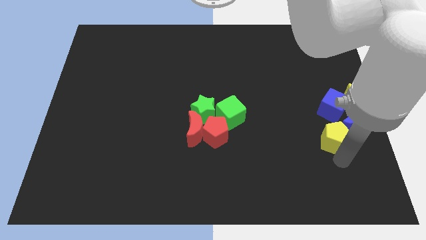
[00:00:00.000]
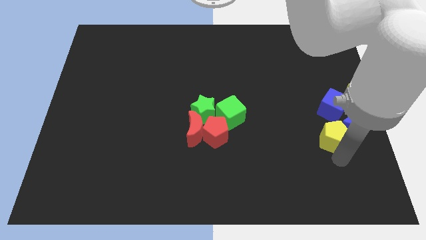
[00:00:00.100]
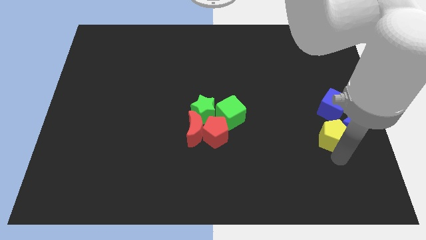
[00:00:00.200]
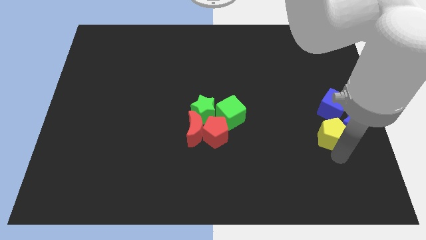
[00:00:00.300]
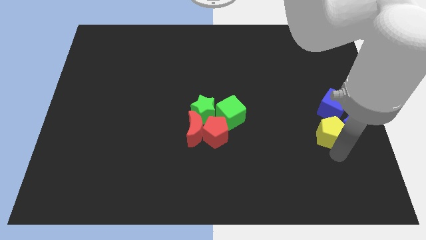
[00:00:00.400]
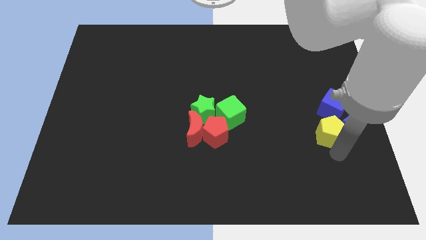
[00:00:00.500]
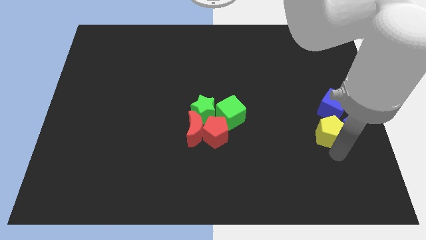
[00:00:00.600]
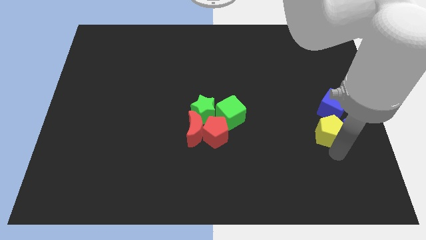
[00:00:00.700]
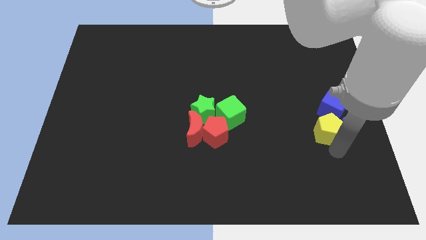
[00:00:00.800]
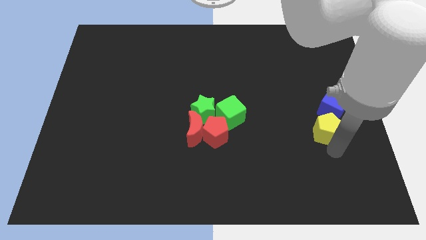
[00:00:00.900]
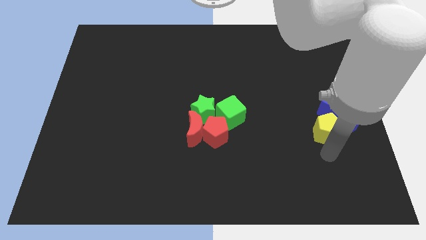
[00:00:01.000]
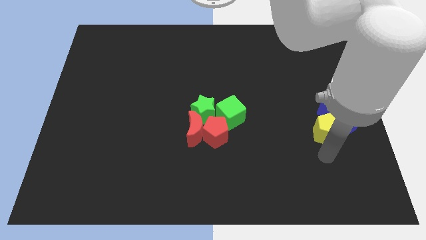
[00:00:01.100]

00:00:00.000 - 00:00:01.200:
place the yellow pentagon below the blue cube

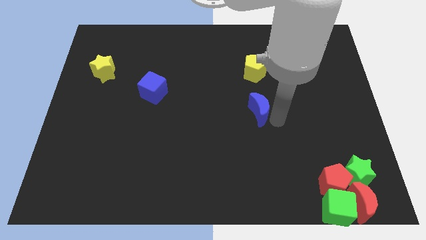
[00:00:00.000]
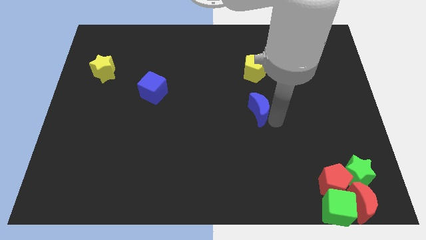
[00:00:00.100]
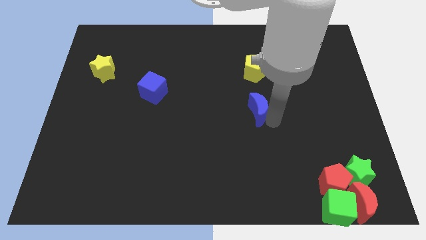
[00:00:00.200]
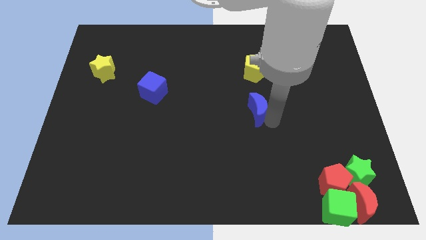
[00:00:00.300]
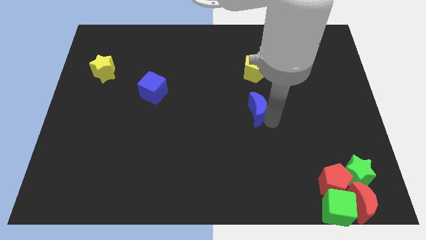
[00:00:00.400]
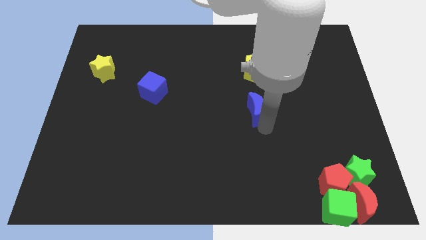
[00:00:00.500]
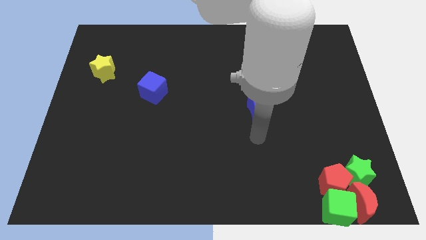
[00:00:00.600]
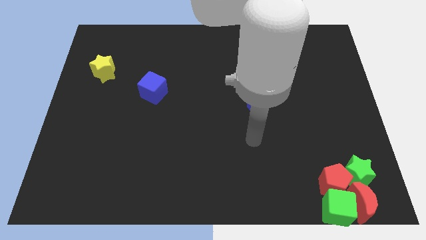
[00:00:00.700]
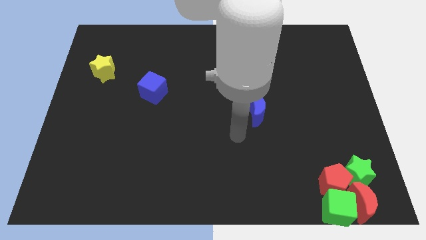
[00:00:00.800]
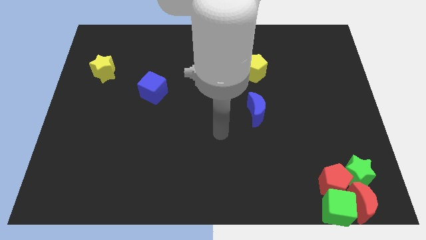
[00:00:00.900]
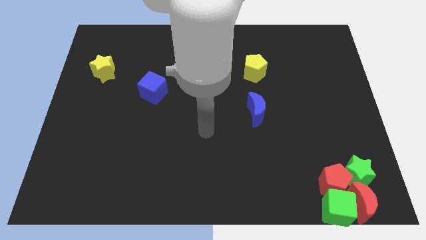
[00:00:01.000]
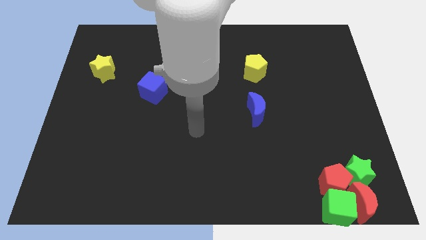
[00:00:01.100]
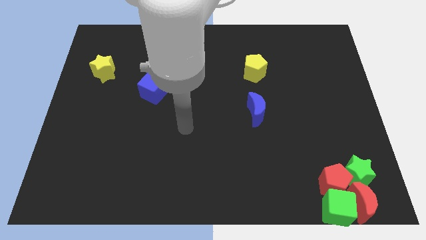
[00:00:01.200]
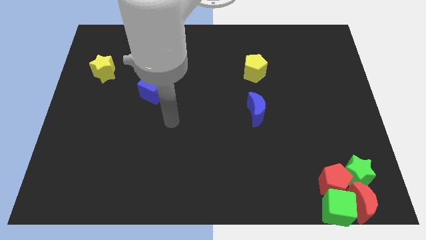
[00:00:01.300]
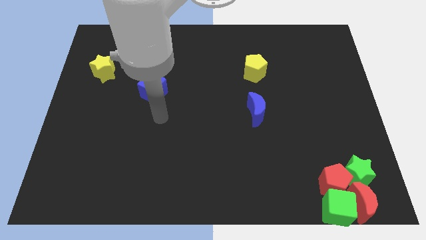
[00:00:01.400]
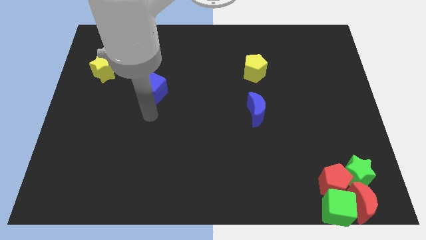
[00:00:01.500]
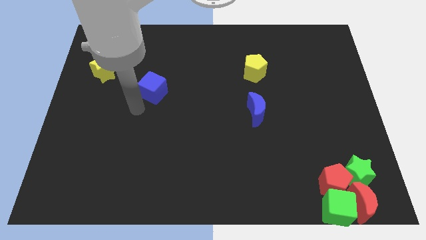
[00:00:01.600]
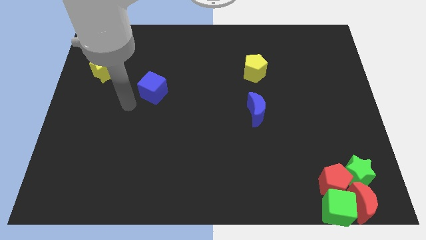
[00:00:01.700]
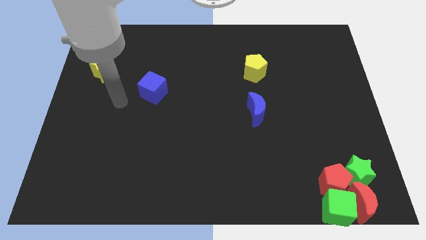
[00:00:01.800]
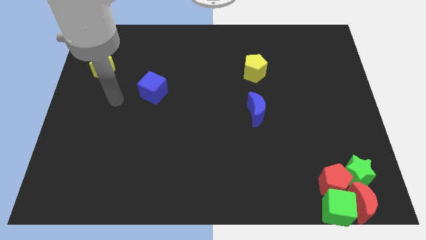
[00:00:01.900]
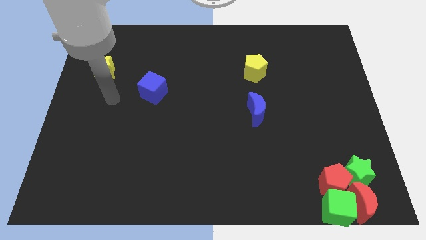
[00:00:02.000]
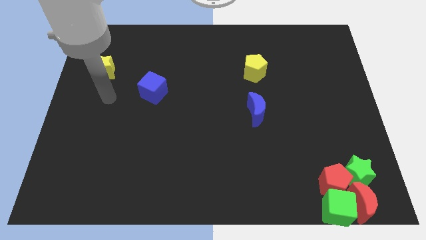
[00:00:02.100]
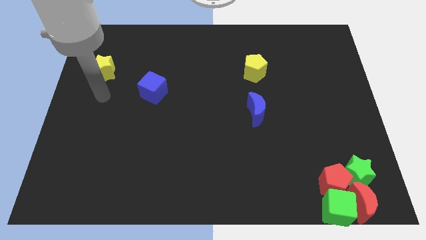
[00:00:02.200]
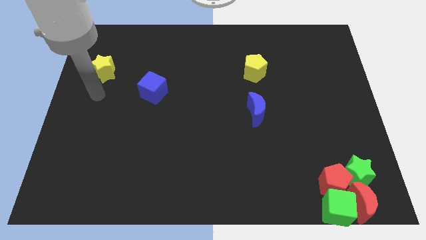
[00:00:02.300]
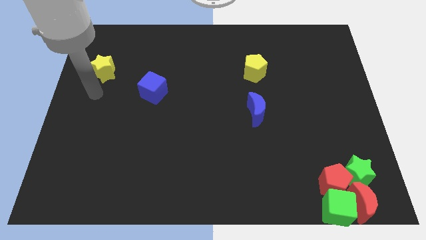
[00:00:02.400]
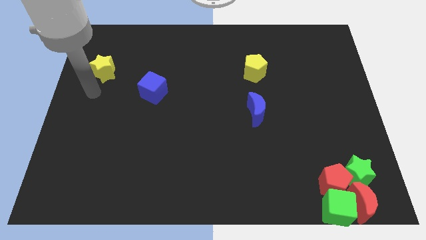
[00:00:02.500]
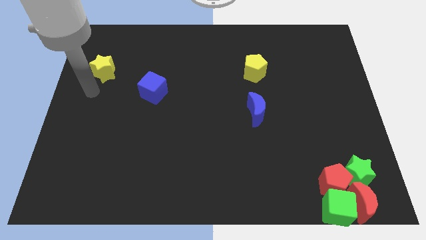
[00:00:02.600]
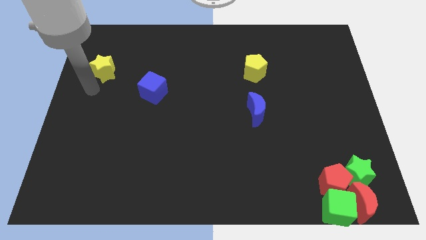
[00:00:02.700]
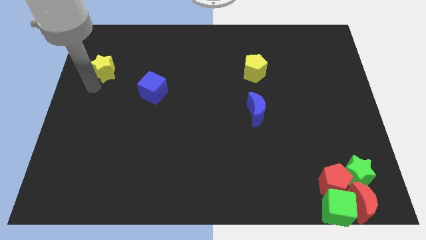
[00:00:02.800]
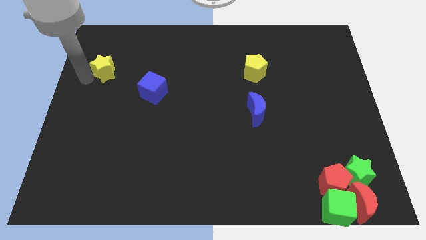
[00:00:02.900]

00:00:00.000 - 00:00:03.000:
put your arm below the yellow star

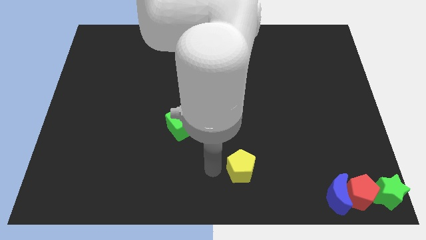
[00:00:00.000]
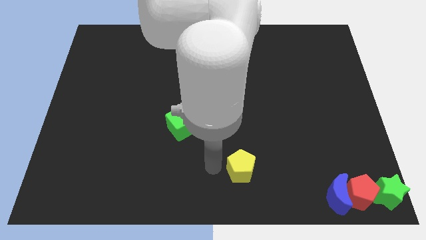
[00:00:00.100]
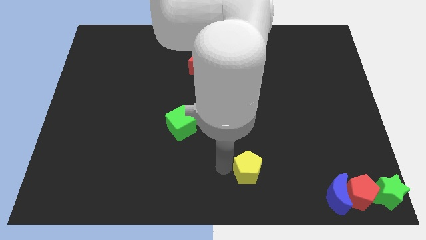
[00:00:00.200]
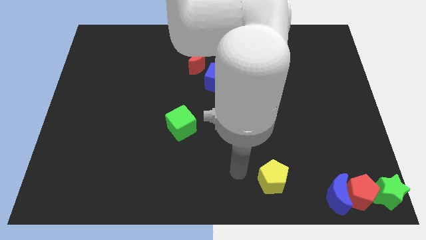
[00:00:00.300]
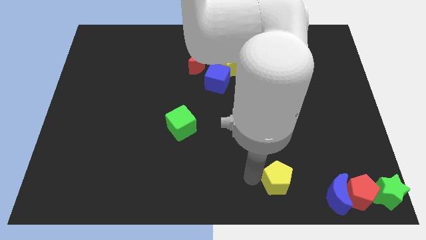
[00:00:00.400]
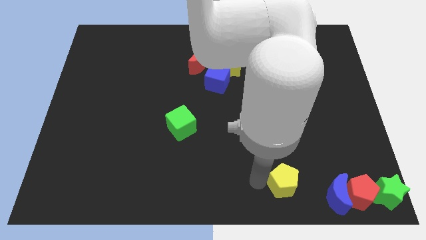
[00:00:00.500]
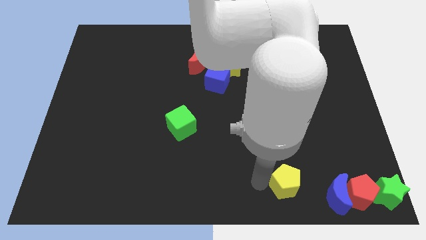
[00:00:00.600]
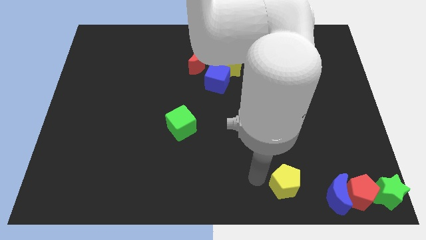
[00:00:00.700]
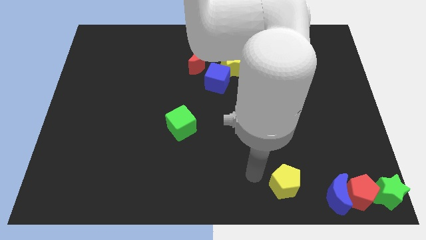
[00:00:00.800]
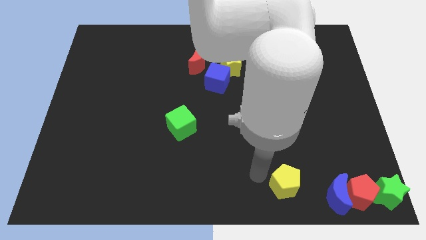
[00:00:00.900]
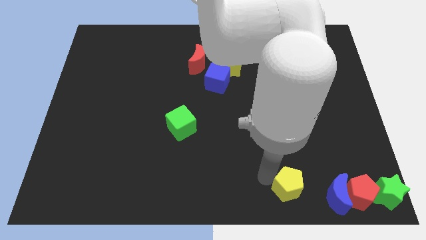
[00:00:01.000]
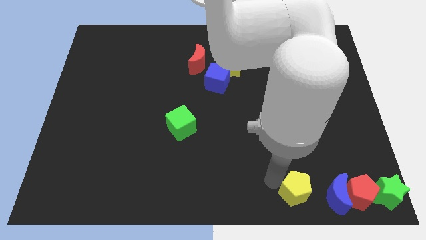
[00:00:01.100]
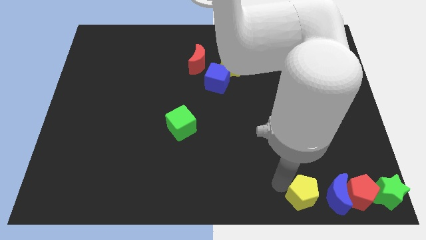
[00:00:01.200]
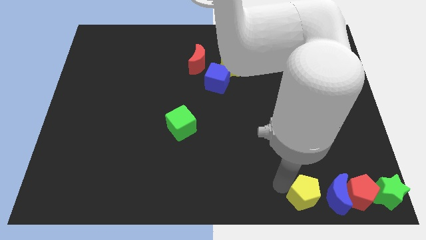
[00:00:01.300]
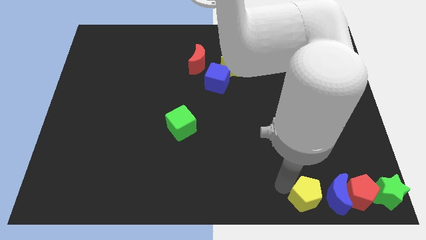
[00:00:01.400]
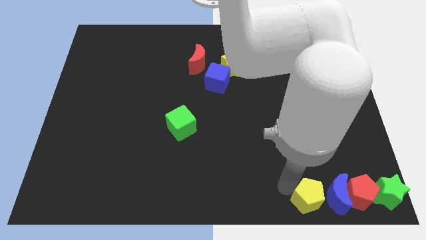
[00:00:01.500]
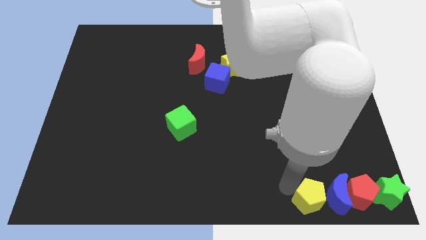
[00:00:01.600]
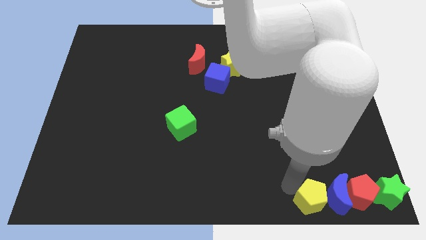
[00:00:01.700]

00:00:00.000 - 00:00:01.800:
push the yellow pentagon to the left of the blue crescent

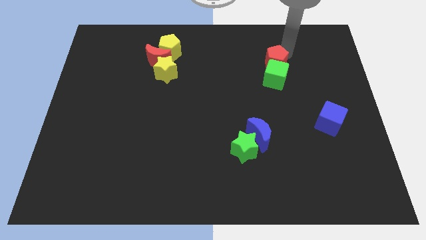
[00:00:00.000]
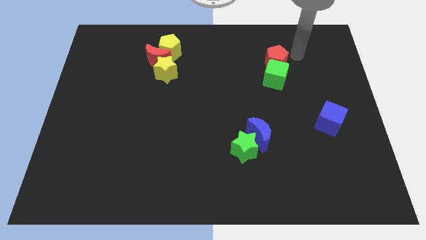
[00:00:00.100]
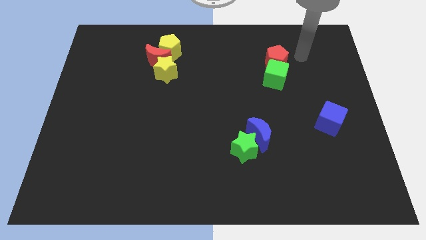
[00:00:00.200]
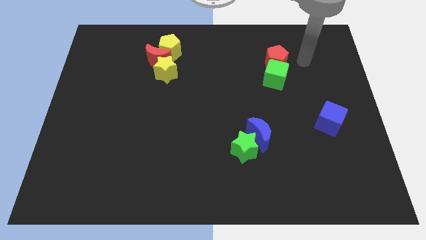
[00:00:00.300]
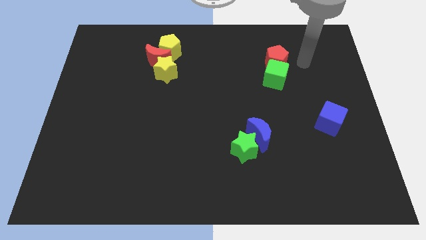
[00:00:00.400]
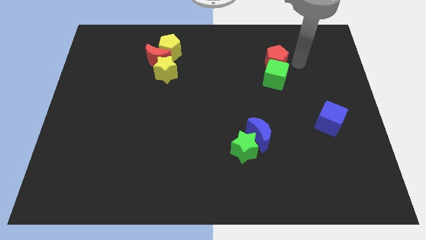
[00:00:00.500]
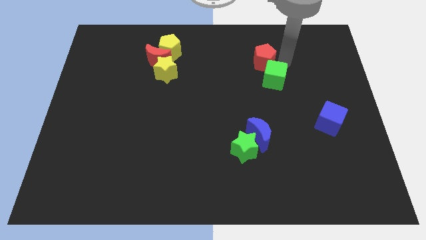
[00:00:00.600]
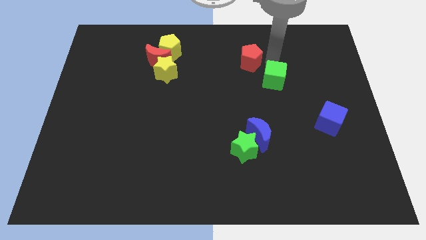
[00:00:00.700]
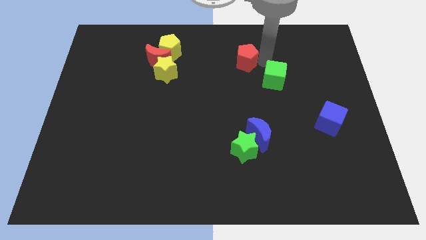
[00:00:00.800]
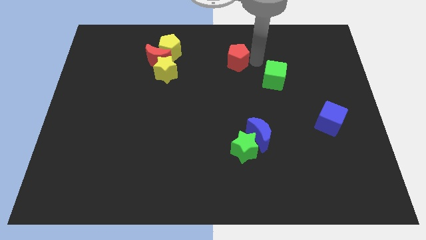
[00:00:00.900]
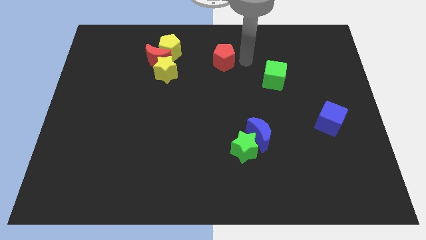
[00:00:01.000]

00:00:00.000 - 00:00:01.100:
place the red pentagon parallel to red moon

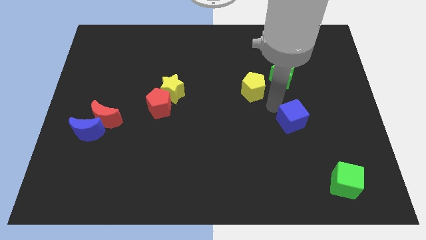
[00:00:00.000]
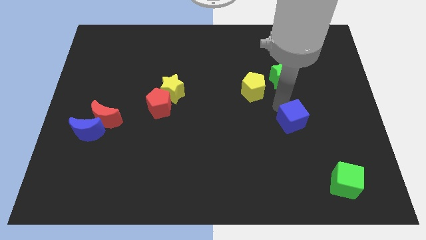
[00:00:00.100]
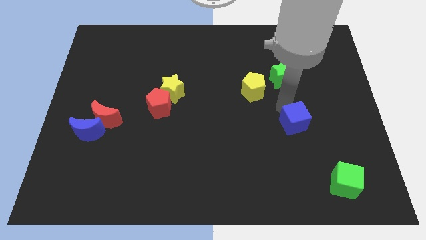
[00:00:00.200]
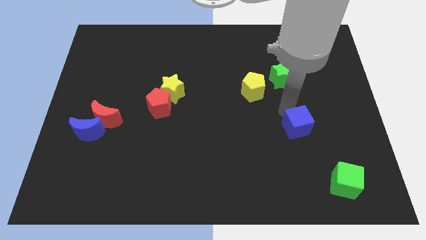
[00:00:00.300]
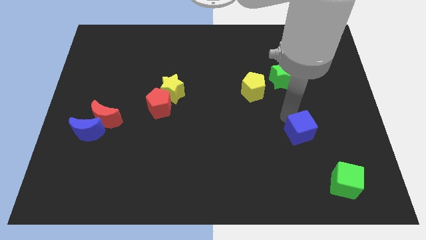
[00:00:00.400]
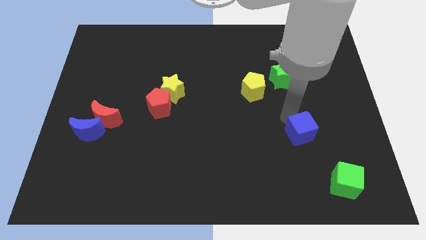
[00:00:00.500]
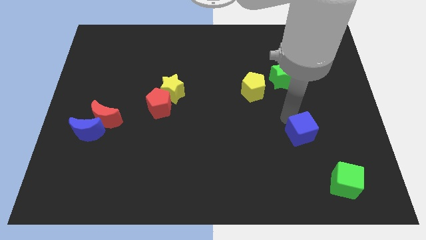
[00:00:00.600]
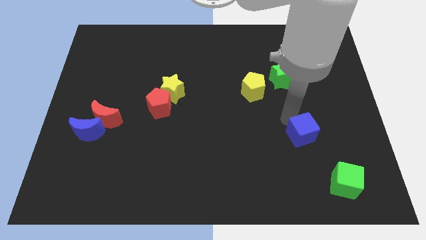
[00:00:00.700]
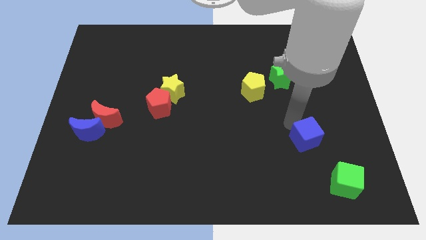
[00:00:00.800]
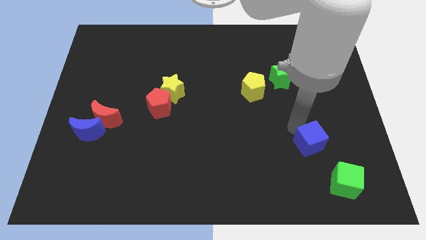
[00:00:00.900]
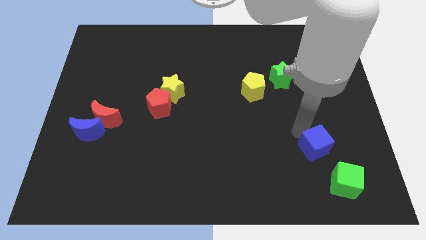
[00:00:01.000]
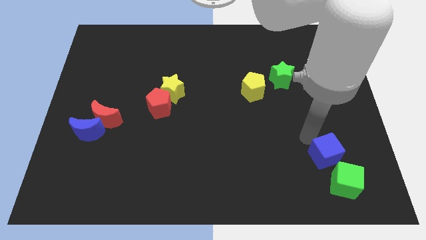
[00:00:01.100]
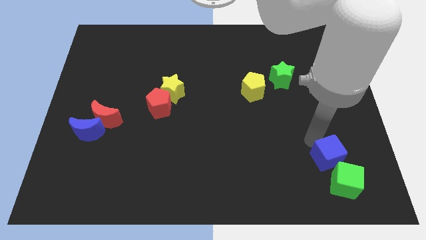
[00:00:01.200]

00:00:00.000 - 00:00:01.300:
push the blue cube close to green cube

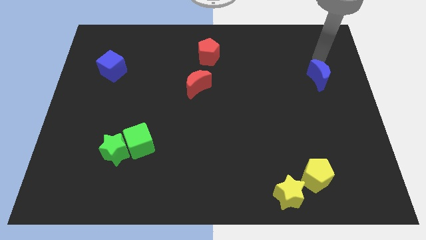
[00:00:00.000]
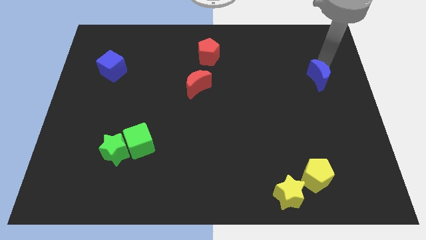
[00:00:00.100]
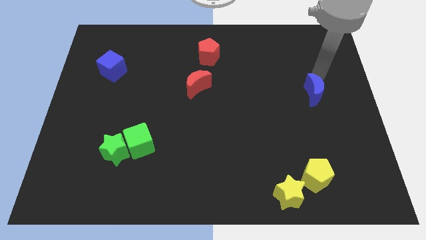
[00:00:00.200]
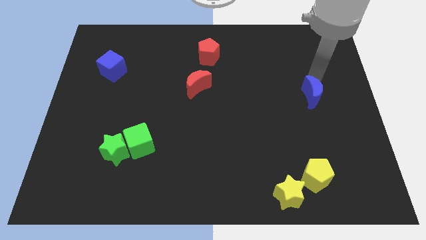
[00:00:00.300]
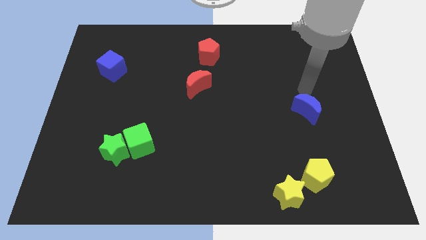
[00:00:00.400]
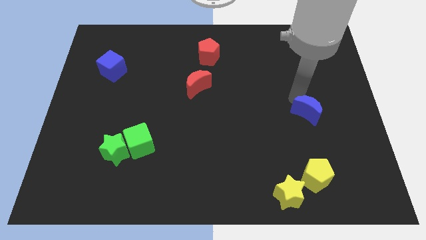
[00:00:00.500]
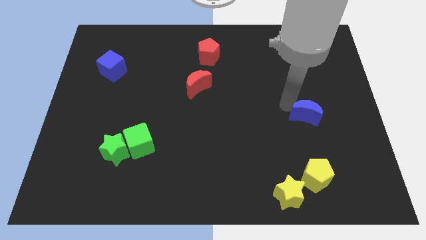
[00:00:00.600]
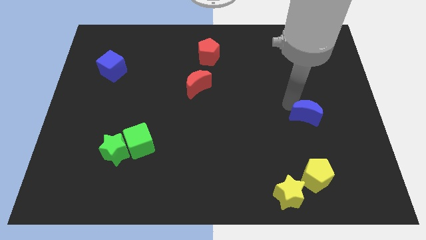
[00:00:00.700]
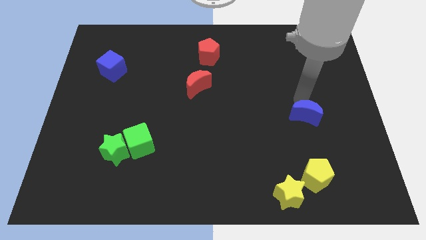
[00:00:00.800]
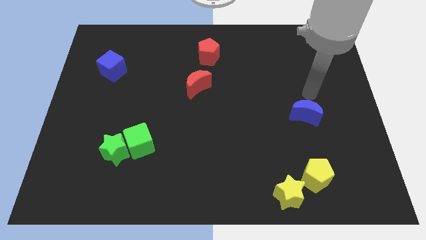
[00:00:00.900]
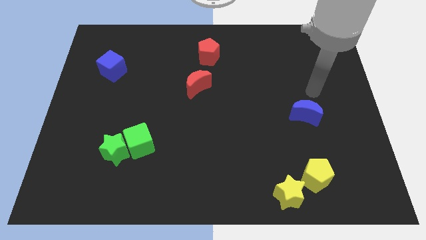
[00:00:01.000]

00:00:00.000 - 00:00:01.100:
slide blue moon down vertical to yellow pentagon
